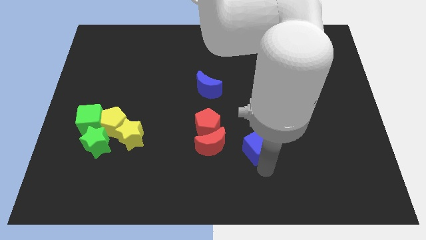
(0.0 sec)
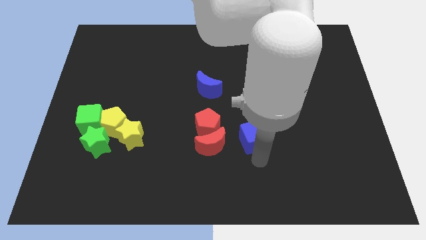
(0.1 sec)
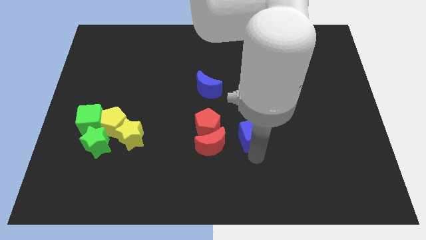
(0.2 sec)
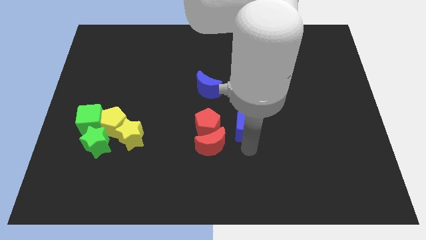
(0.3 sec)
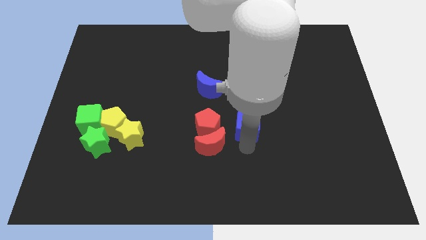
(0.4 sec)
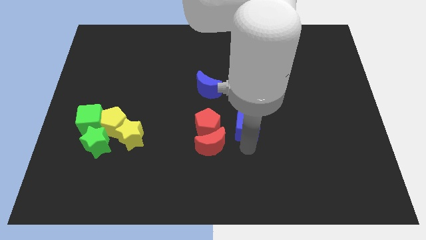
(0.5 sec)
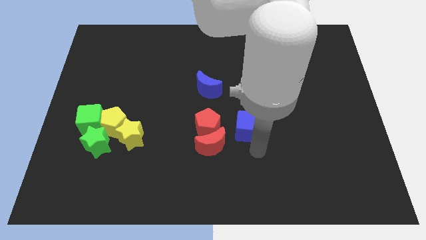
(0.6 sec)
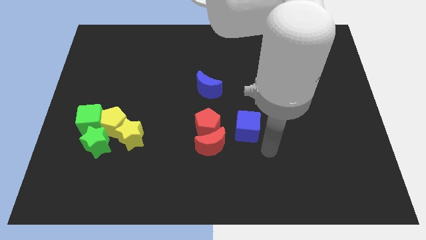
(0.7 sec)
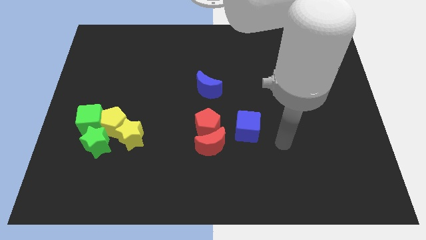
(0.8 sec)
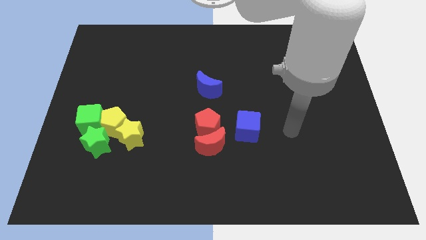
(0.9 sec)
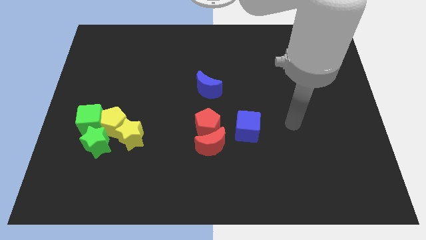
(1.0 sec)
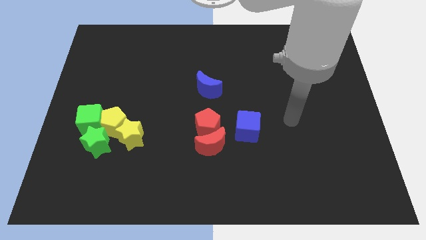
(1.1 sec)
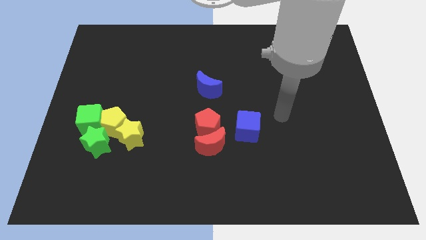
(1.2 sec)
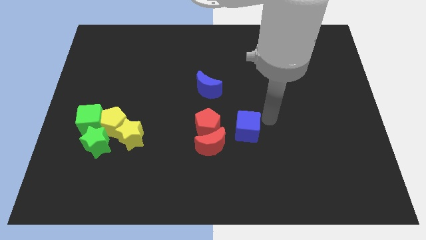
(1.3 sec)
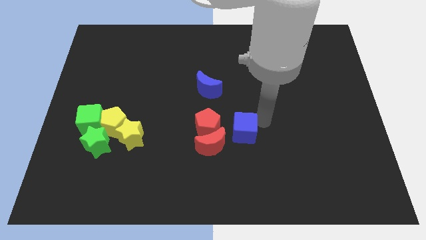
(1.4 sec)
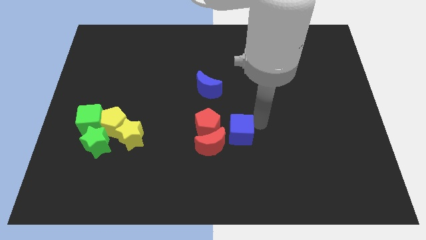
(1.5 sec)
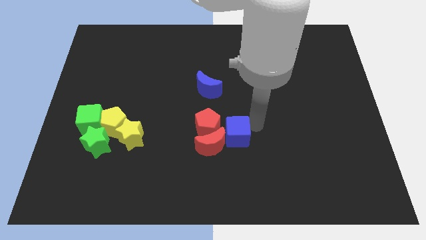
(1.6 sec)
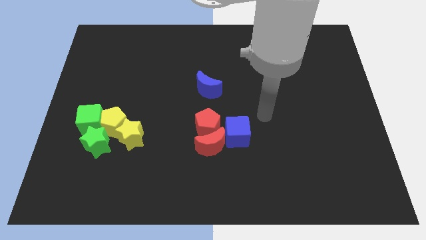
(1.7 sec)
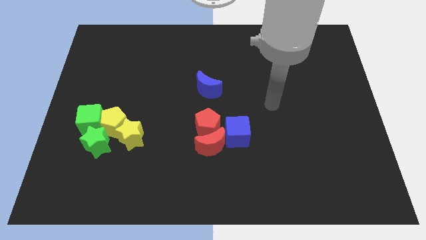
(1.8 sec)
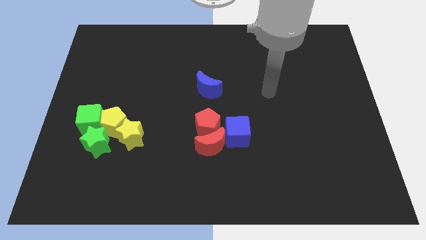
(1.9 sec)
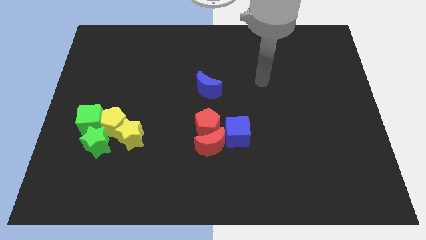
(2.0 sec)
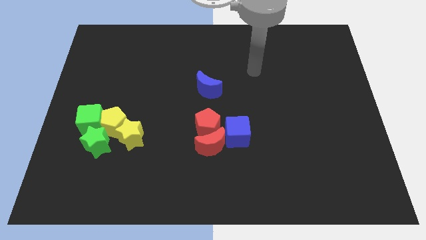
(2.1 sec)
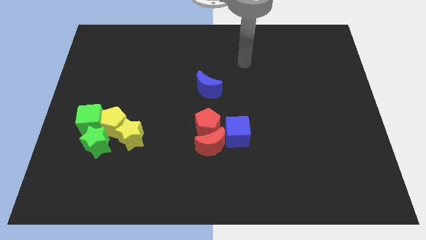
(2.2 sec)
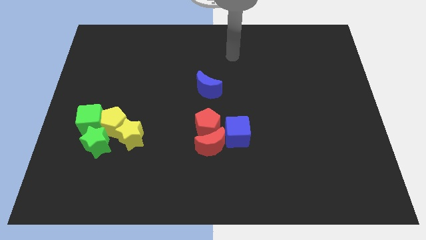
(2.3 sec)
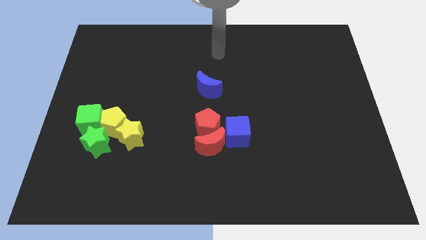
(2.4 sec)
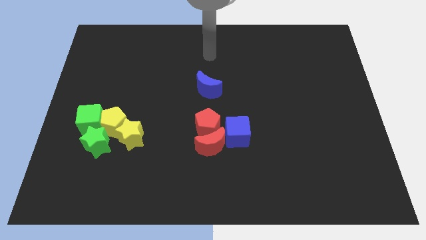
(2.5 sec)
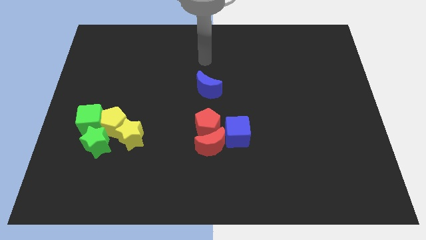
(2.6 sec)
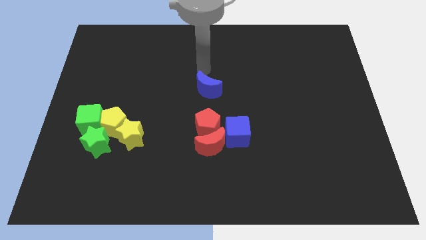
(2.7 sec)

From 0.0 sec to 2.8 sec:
place the blue cube right to the red pentagon and red crescent

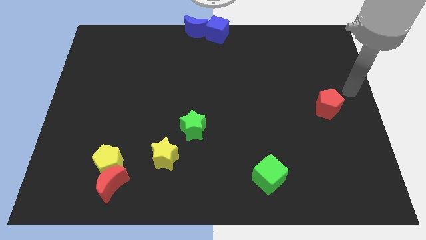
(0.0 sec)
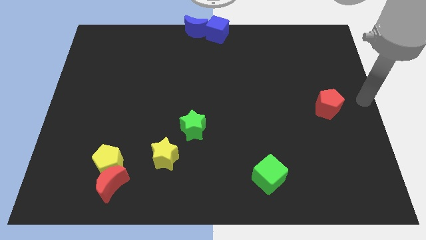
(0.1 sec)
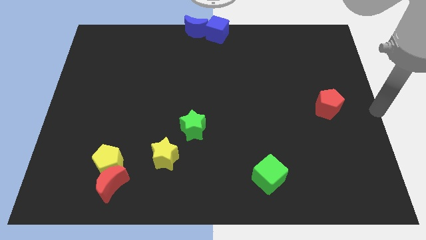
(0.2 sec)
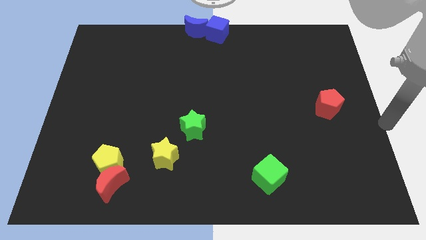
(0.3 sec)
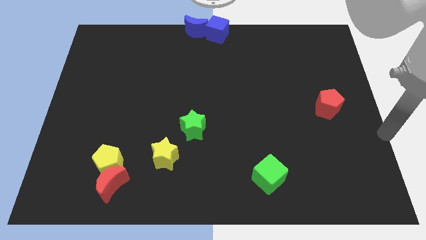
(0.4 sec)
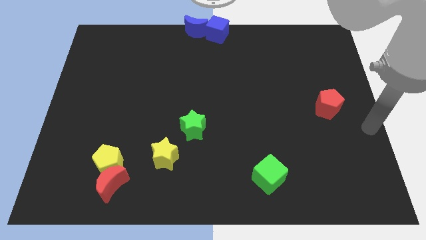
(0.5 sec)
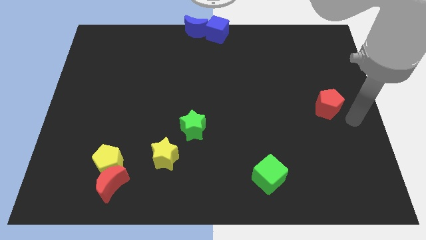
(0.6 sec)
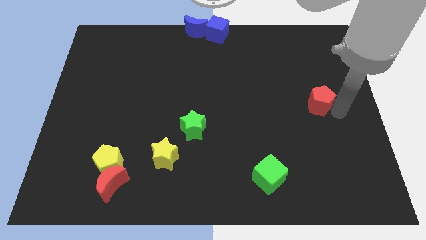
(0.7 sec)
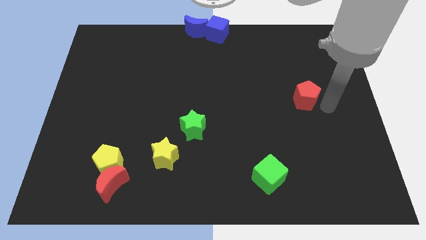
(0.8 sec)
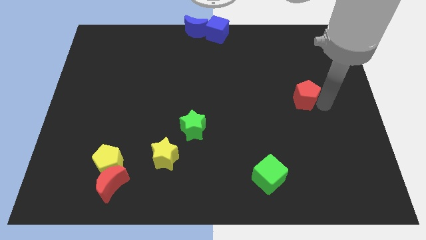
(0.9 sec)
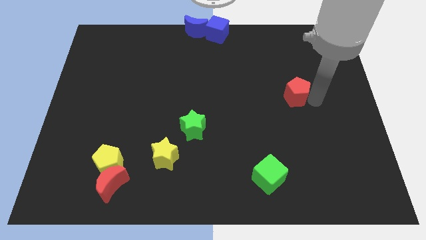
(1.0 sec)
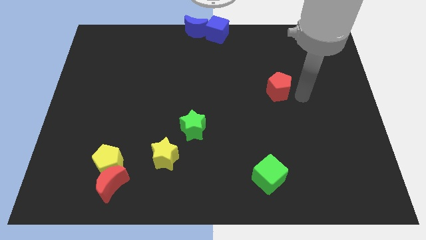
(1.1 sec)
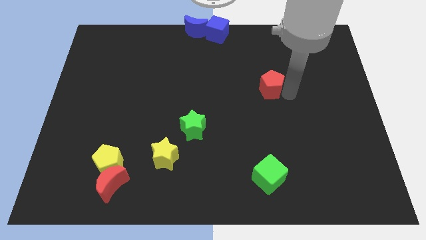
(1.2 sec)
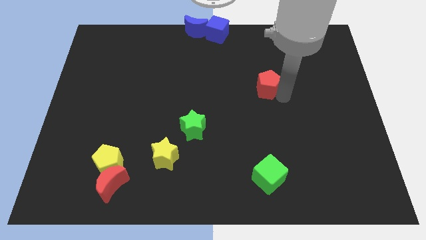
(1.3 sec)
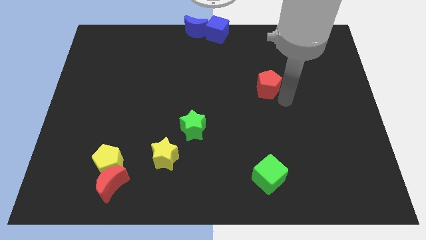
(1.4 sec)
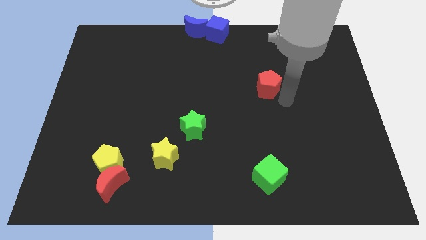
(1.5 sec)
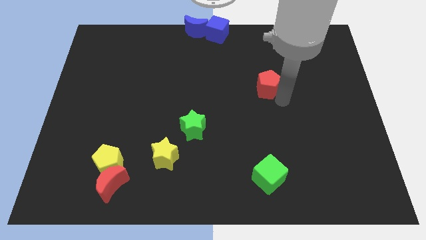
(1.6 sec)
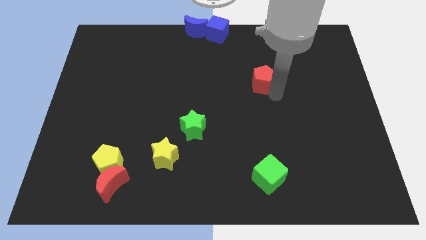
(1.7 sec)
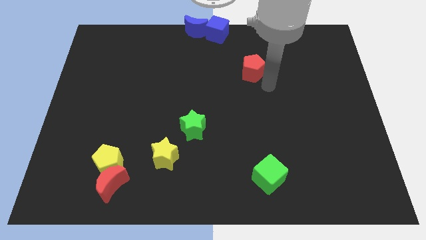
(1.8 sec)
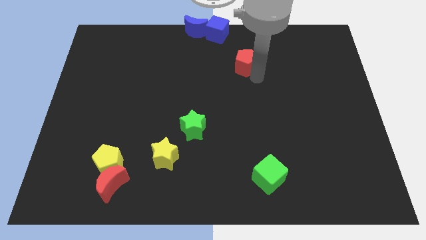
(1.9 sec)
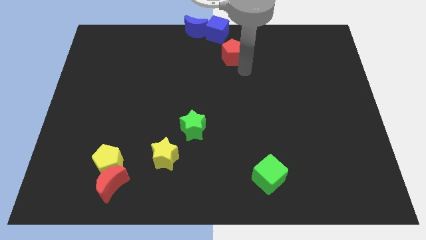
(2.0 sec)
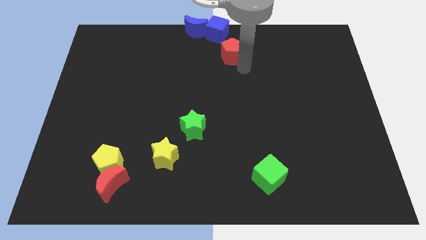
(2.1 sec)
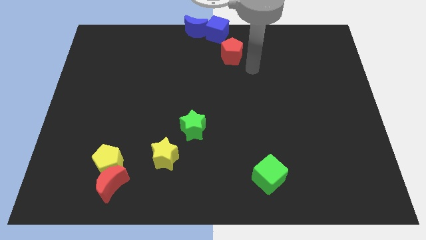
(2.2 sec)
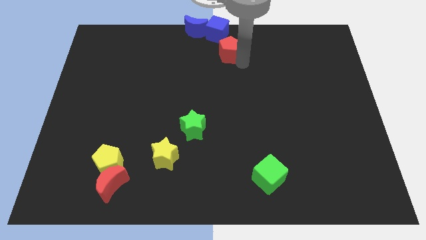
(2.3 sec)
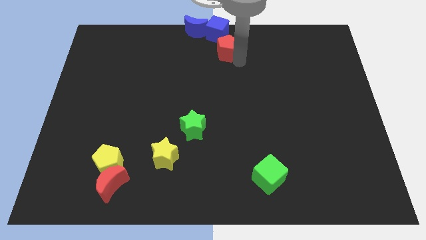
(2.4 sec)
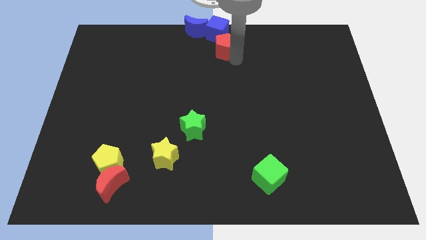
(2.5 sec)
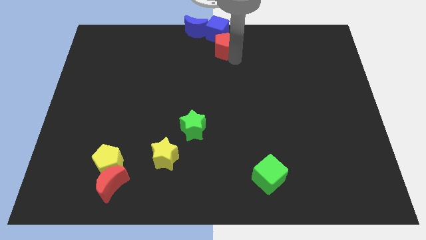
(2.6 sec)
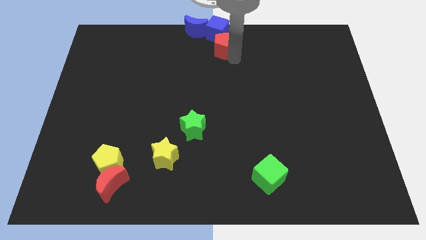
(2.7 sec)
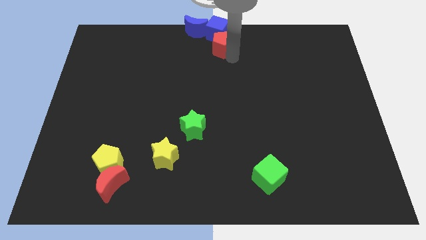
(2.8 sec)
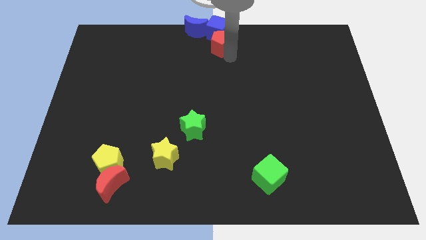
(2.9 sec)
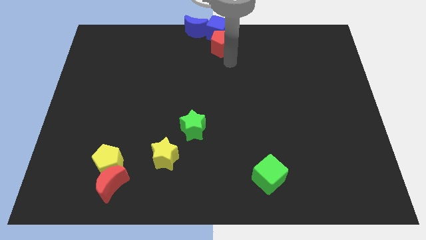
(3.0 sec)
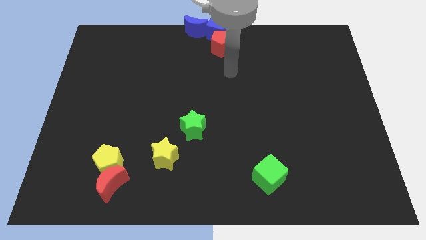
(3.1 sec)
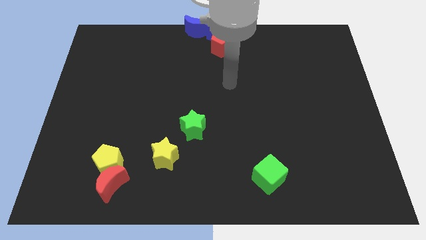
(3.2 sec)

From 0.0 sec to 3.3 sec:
move the red pentagon at the bottom of the blue cube

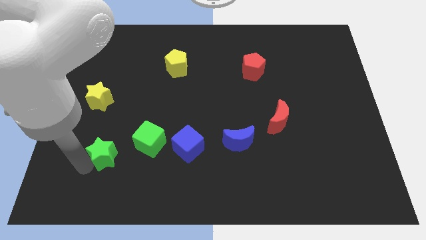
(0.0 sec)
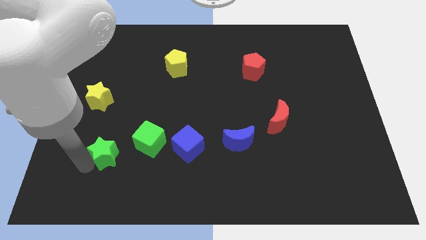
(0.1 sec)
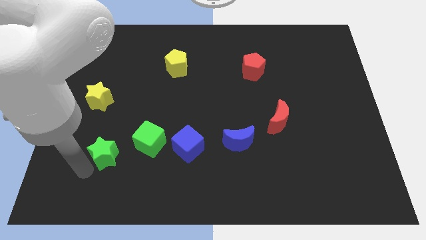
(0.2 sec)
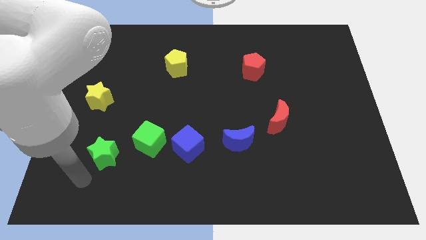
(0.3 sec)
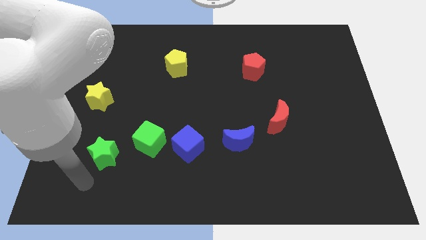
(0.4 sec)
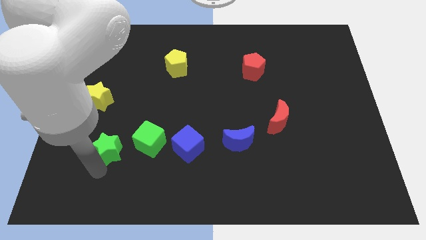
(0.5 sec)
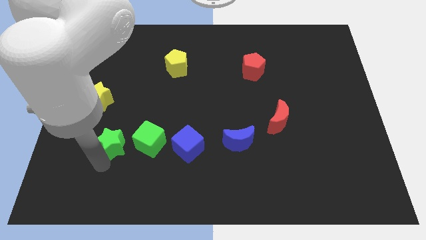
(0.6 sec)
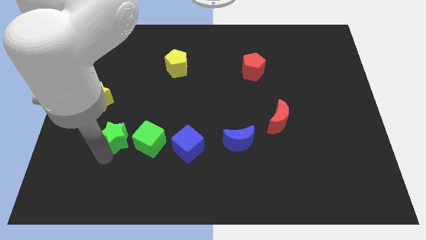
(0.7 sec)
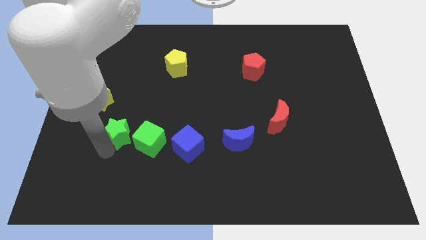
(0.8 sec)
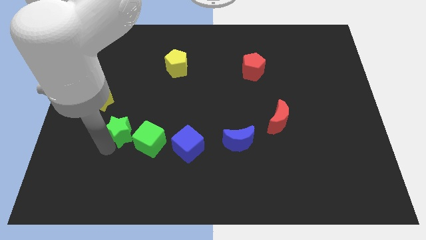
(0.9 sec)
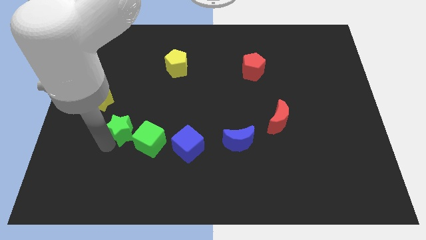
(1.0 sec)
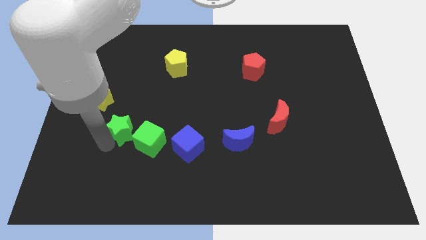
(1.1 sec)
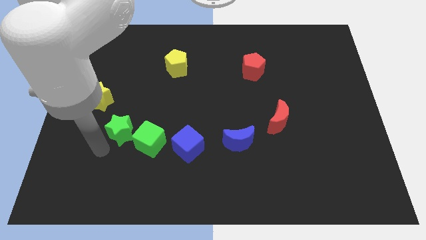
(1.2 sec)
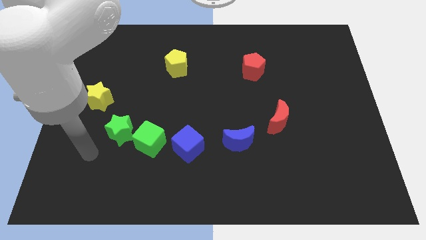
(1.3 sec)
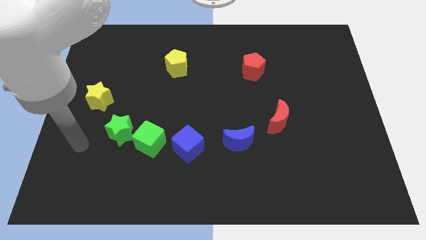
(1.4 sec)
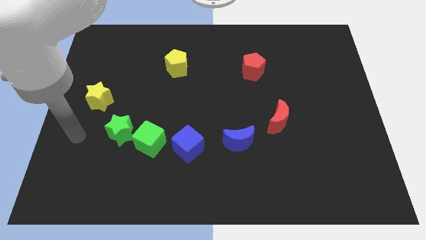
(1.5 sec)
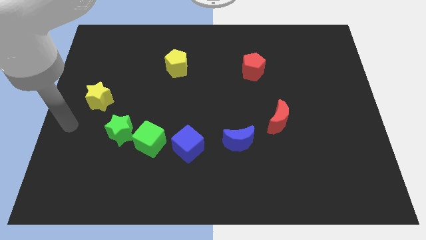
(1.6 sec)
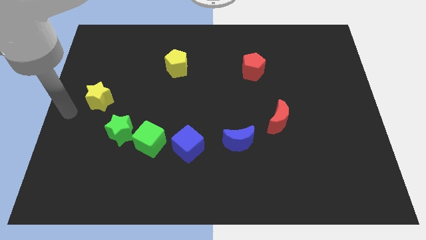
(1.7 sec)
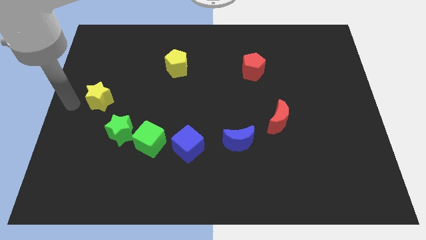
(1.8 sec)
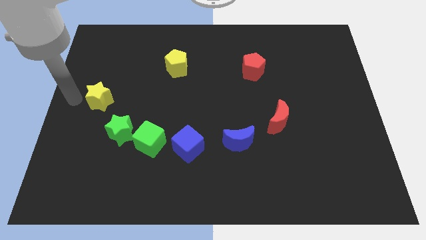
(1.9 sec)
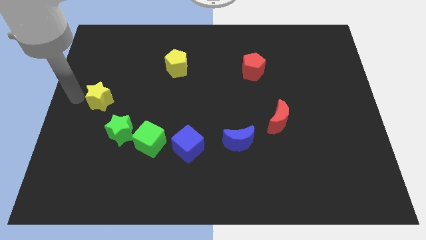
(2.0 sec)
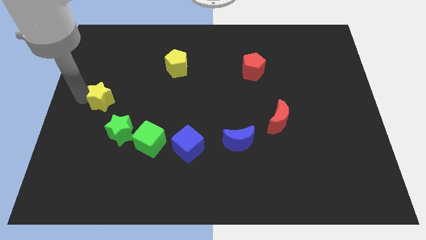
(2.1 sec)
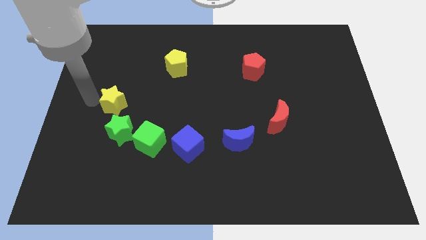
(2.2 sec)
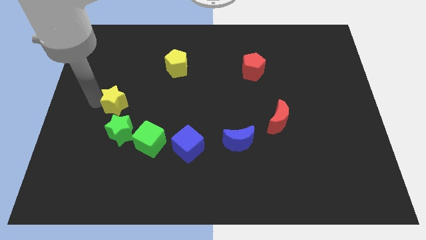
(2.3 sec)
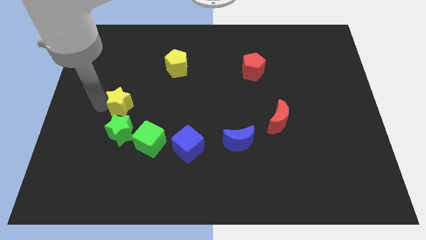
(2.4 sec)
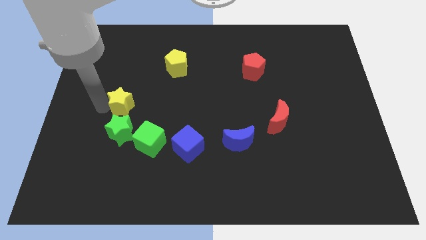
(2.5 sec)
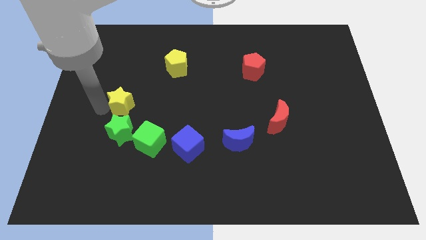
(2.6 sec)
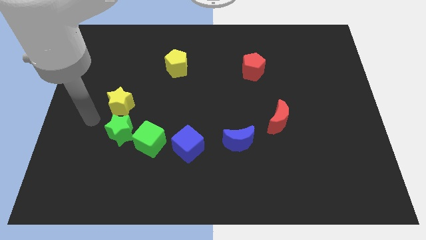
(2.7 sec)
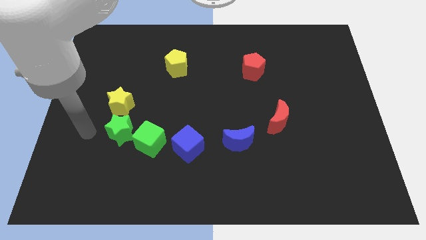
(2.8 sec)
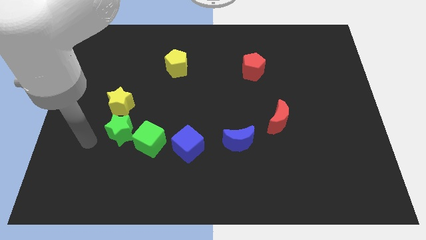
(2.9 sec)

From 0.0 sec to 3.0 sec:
move the yellow star to the top right side of the green star
